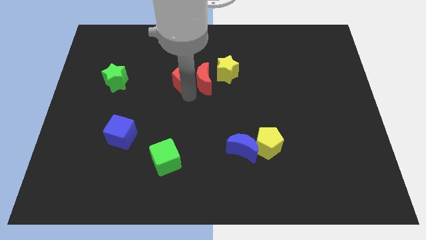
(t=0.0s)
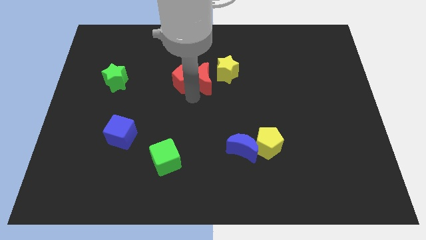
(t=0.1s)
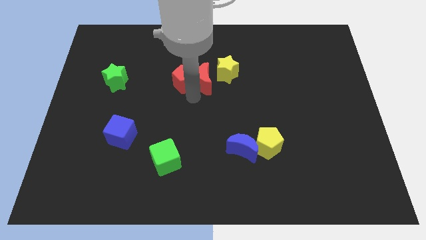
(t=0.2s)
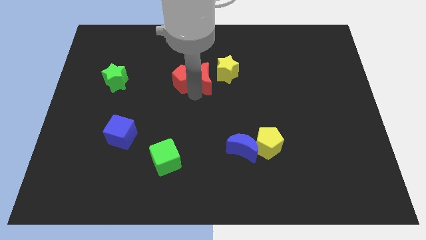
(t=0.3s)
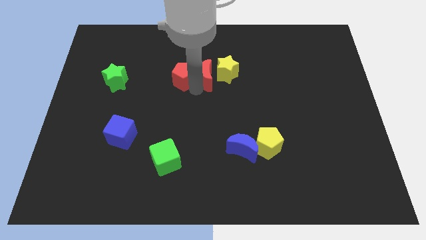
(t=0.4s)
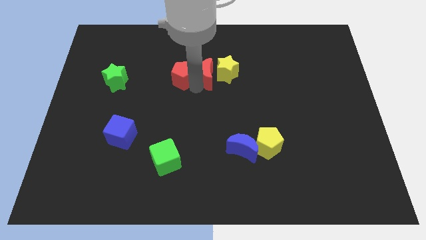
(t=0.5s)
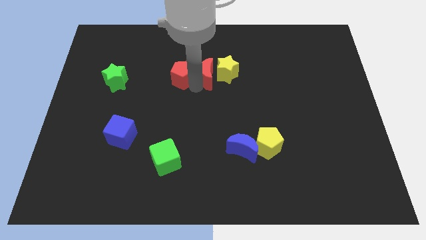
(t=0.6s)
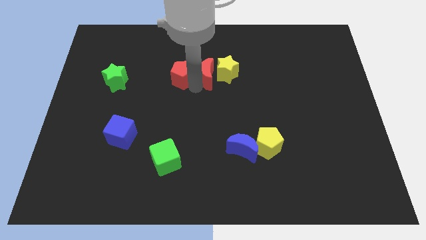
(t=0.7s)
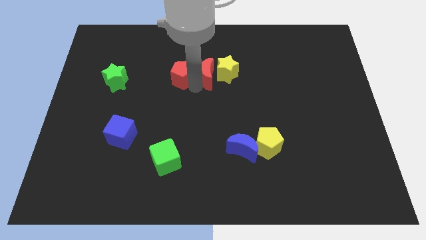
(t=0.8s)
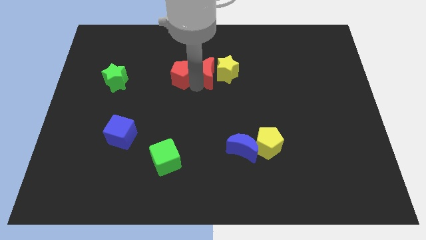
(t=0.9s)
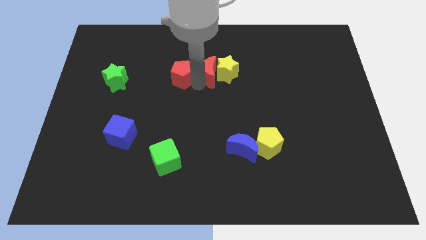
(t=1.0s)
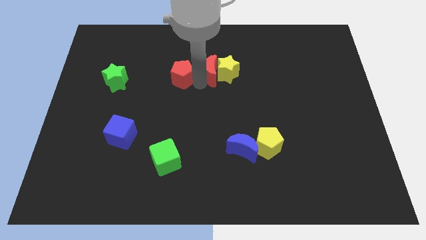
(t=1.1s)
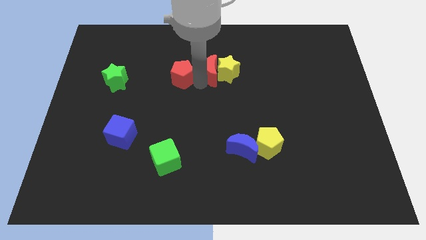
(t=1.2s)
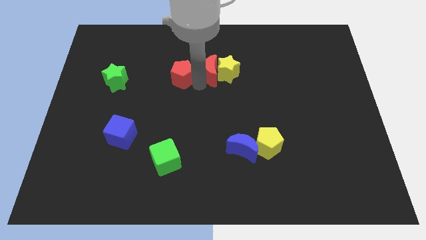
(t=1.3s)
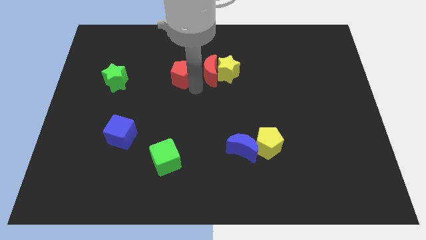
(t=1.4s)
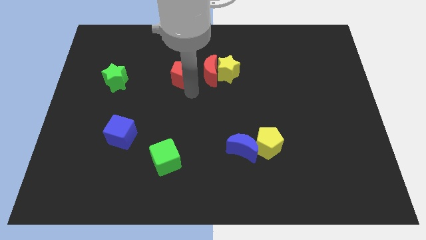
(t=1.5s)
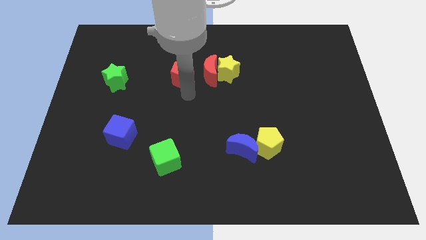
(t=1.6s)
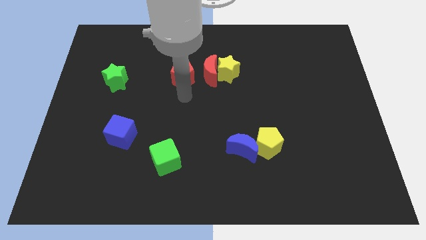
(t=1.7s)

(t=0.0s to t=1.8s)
push the red moon to the left side of the yellow star

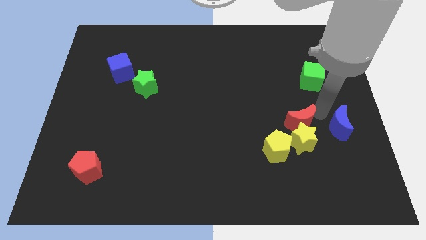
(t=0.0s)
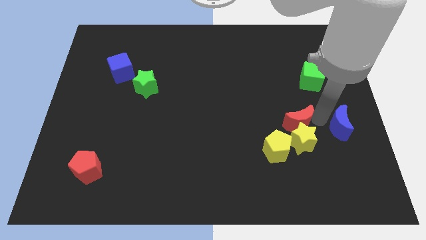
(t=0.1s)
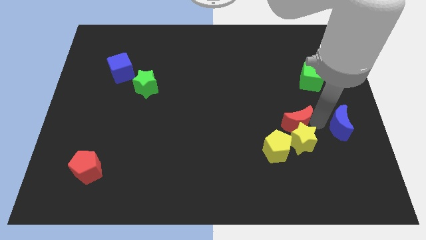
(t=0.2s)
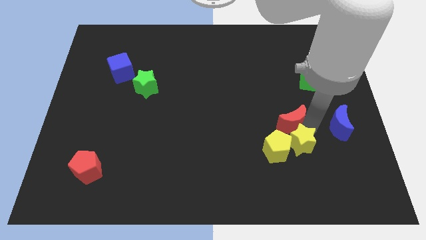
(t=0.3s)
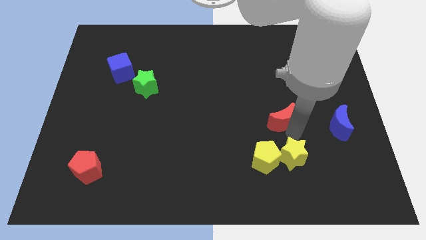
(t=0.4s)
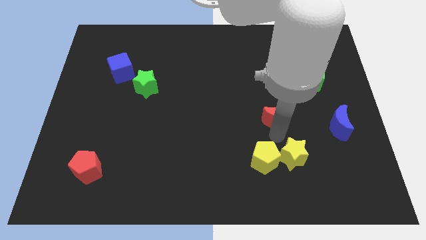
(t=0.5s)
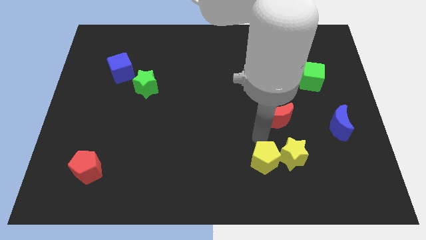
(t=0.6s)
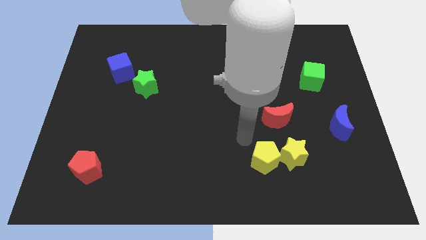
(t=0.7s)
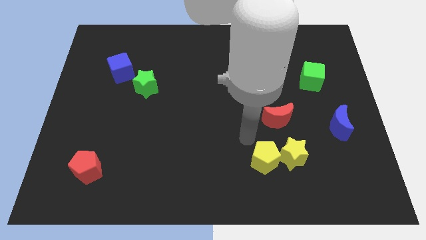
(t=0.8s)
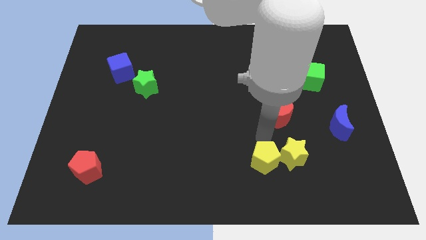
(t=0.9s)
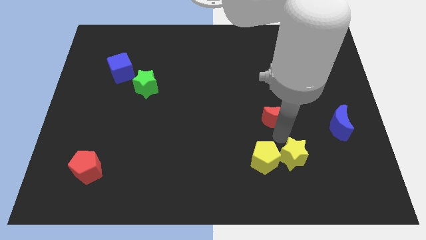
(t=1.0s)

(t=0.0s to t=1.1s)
separate yellow star and red pentagon

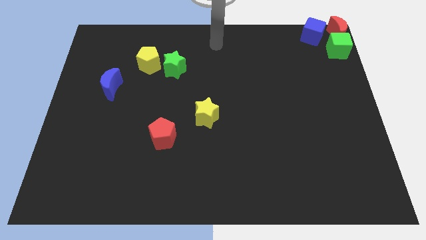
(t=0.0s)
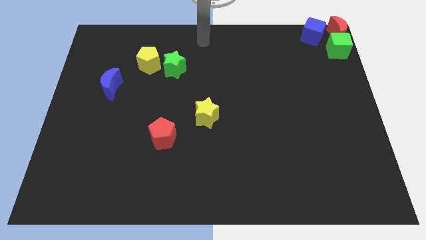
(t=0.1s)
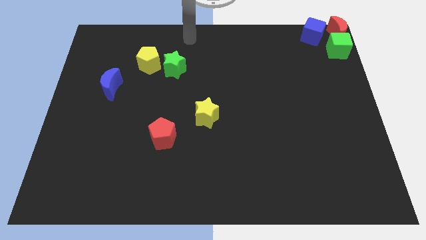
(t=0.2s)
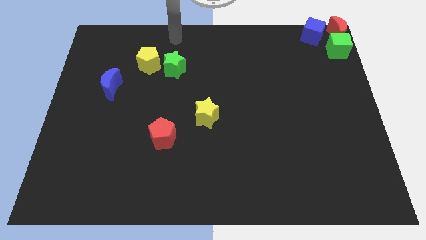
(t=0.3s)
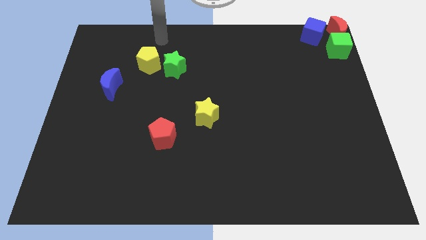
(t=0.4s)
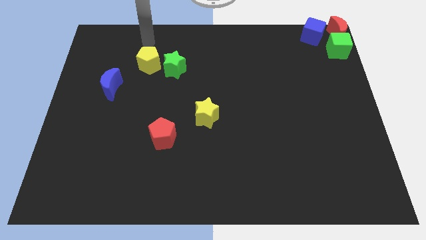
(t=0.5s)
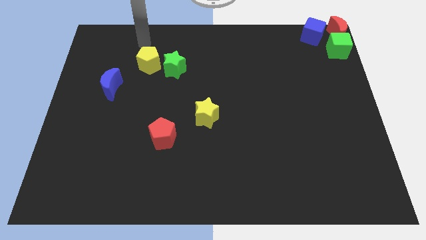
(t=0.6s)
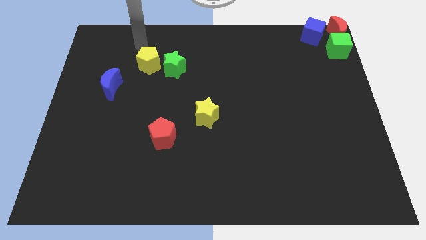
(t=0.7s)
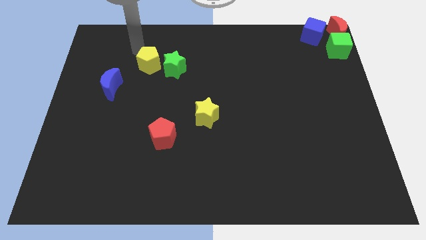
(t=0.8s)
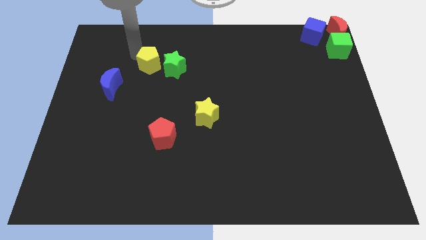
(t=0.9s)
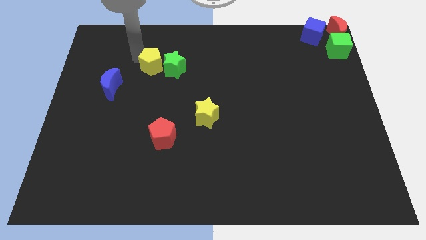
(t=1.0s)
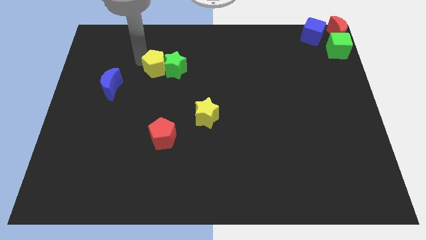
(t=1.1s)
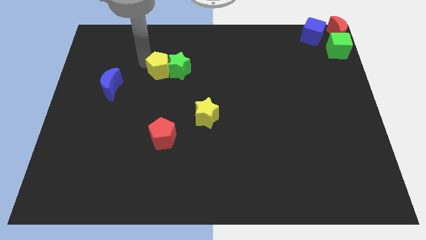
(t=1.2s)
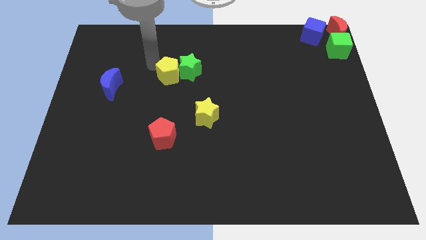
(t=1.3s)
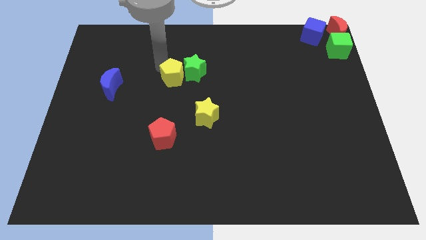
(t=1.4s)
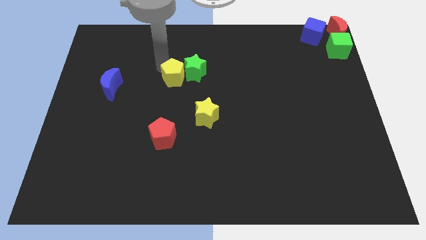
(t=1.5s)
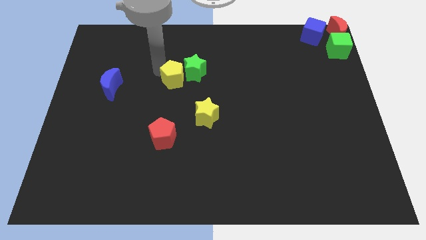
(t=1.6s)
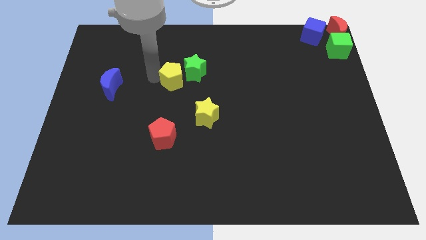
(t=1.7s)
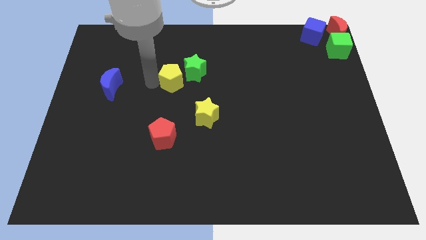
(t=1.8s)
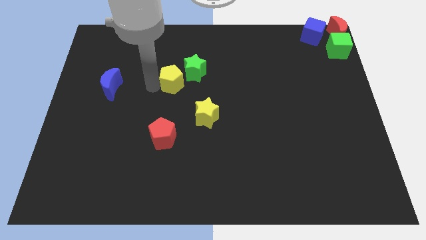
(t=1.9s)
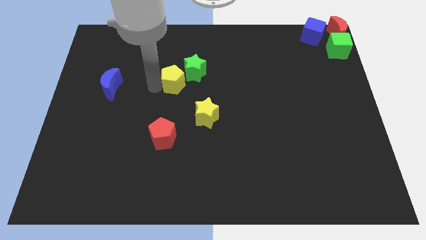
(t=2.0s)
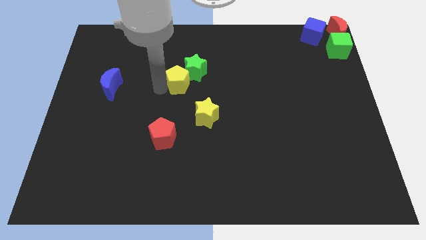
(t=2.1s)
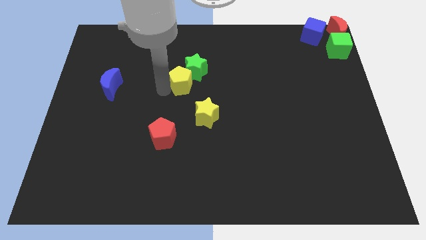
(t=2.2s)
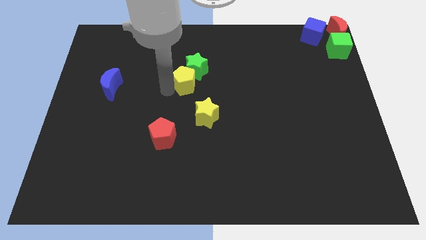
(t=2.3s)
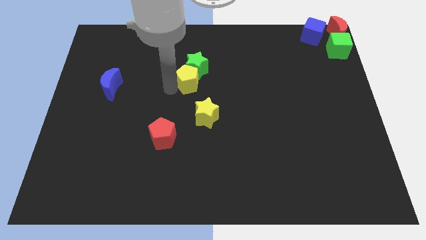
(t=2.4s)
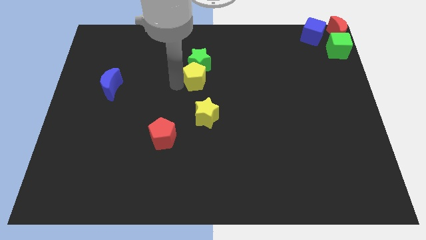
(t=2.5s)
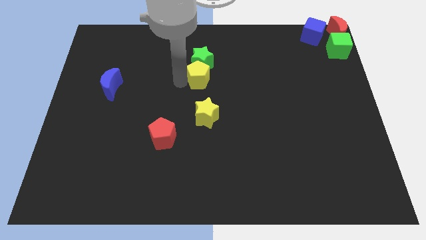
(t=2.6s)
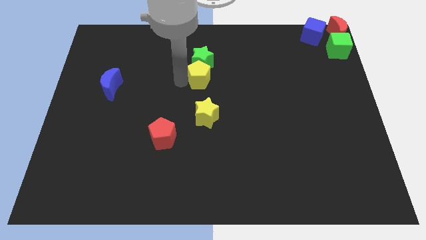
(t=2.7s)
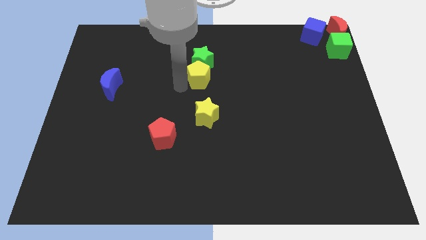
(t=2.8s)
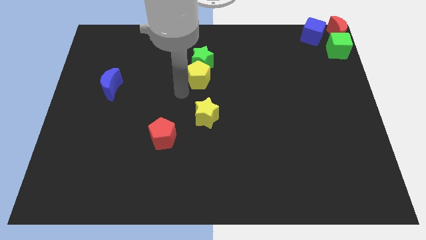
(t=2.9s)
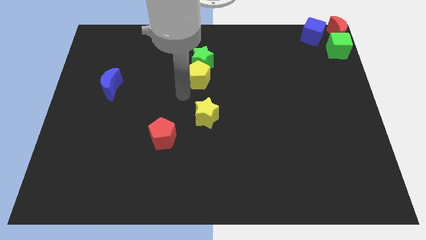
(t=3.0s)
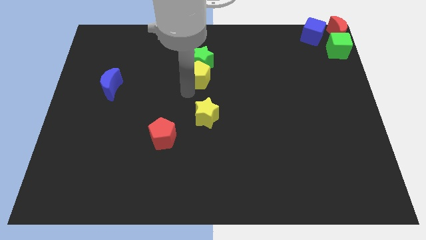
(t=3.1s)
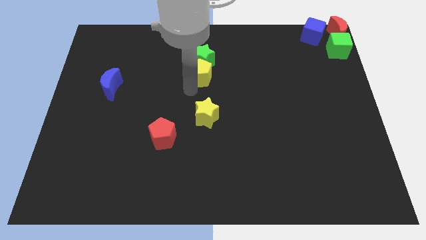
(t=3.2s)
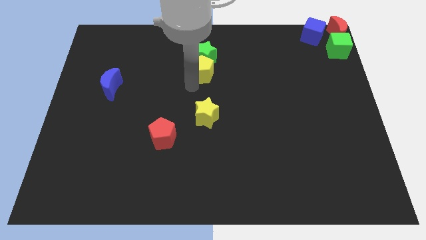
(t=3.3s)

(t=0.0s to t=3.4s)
place yellow pentagon at the bottom of green star

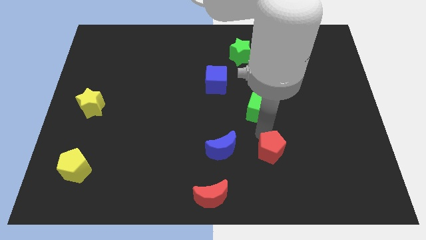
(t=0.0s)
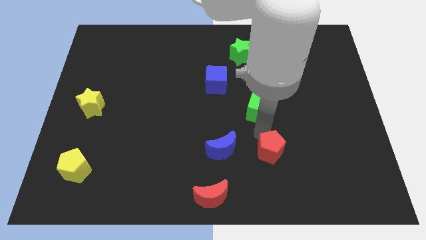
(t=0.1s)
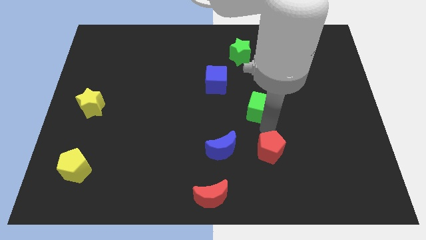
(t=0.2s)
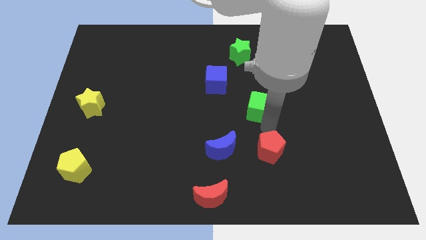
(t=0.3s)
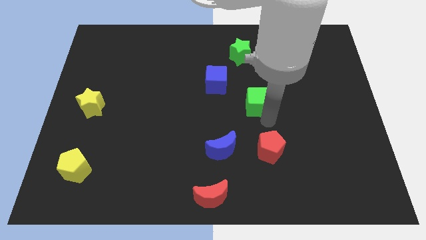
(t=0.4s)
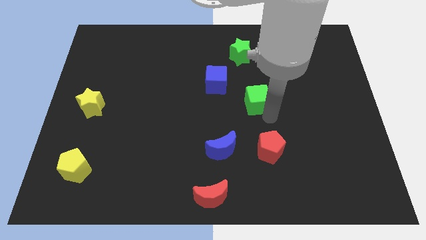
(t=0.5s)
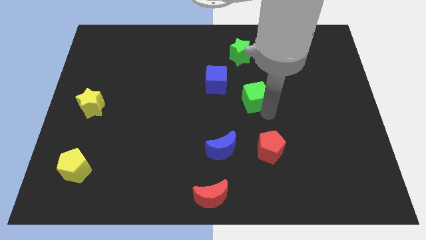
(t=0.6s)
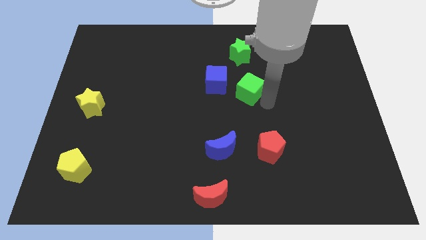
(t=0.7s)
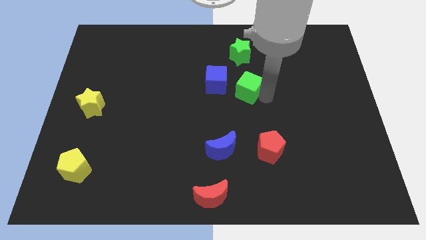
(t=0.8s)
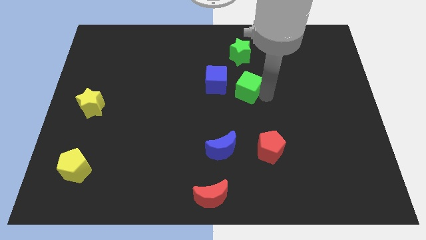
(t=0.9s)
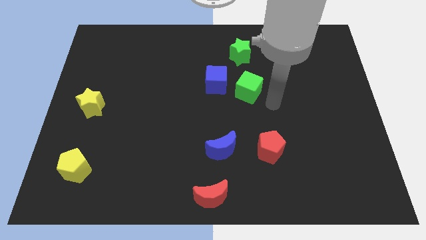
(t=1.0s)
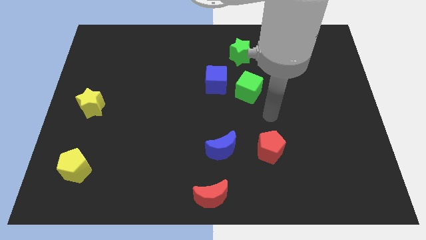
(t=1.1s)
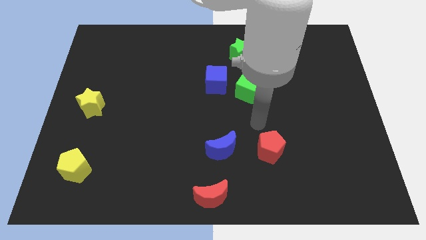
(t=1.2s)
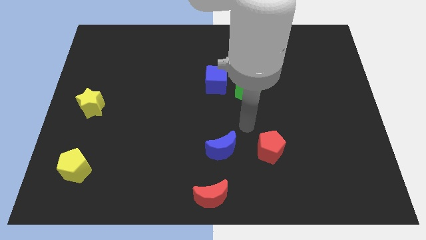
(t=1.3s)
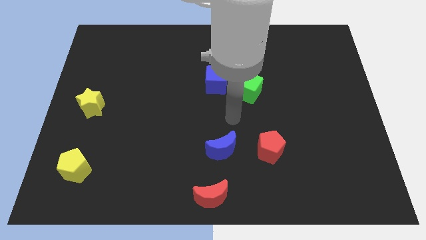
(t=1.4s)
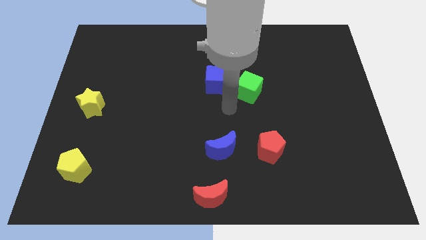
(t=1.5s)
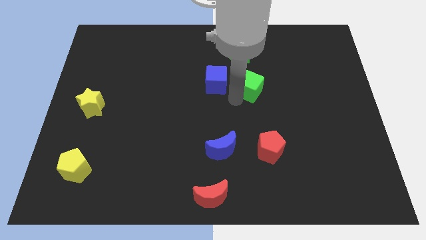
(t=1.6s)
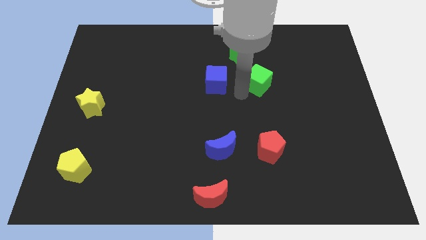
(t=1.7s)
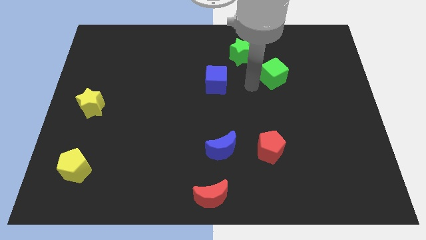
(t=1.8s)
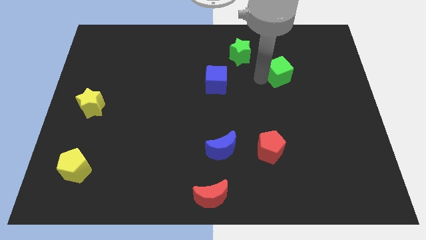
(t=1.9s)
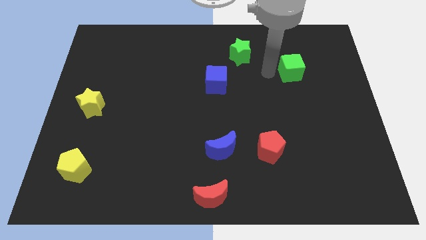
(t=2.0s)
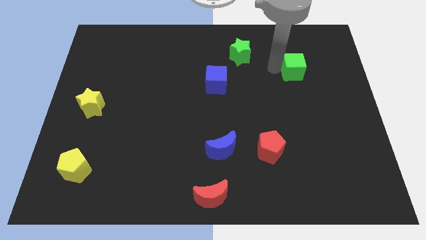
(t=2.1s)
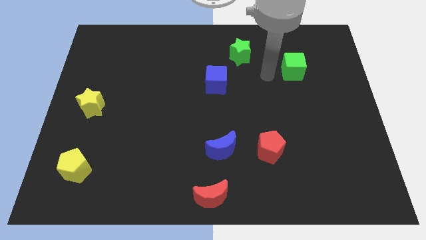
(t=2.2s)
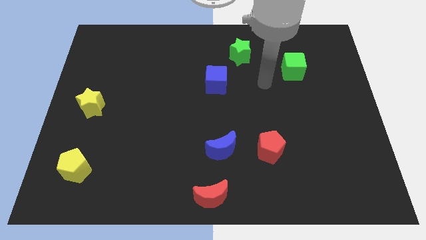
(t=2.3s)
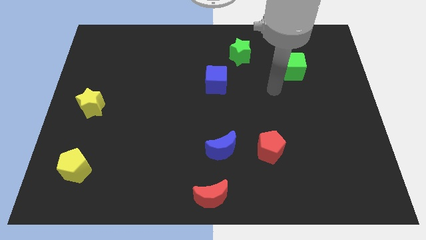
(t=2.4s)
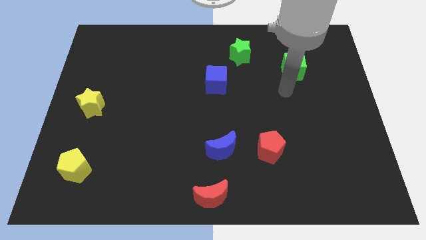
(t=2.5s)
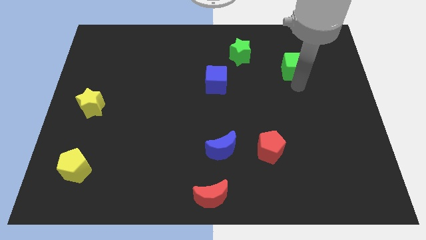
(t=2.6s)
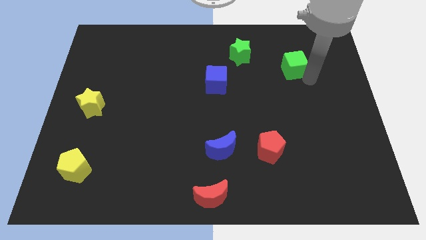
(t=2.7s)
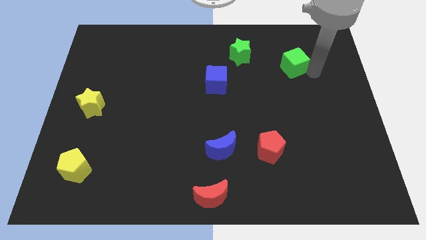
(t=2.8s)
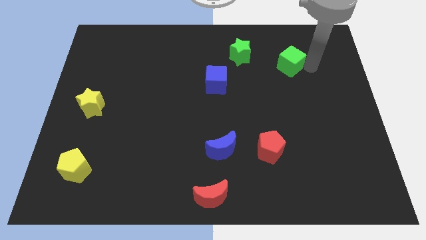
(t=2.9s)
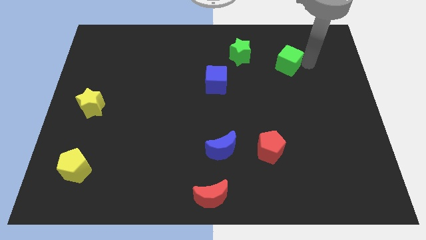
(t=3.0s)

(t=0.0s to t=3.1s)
move the green cube towards the right of the green star
